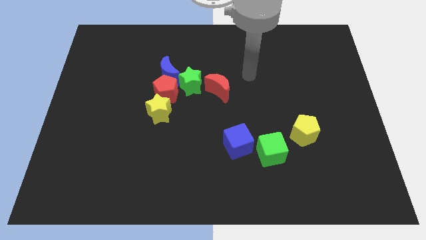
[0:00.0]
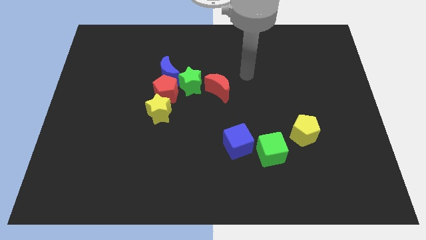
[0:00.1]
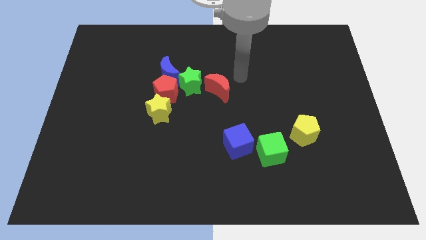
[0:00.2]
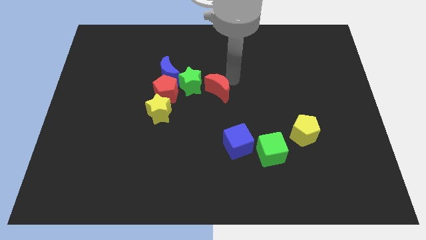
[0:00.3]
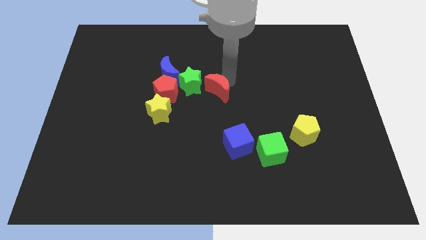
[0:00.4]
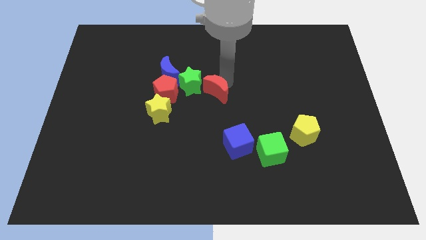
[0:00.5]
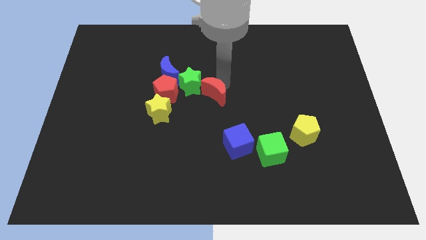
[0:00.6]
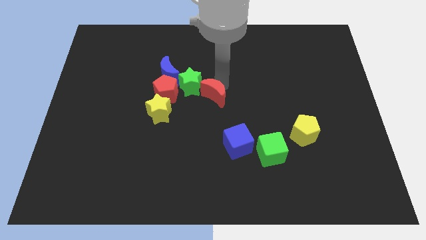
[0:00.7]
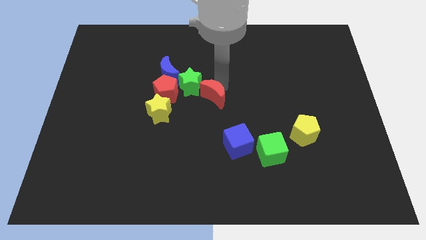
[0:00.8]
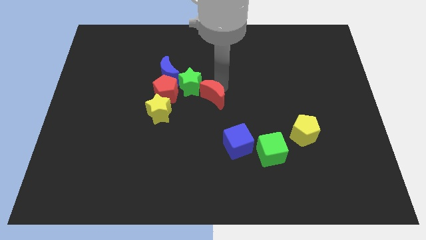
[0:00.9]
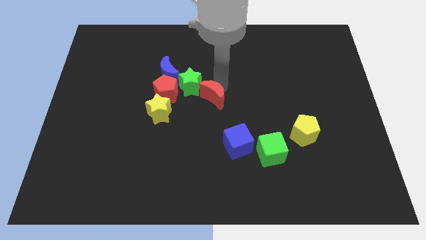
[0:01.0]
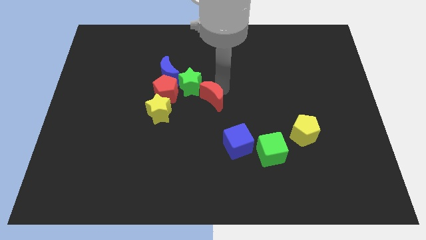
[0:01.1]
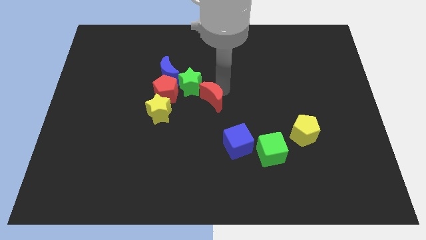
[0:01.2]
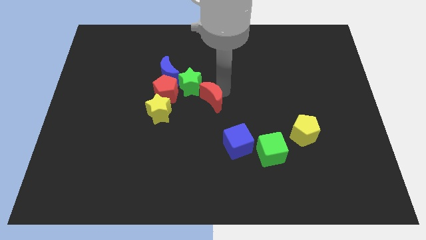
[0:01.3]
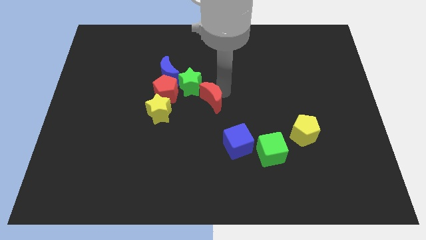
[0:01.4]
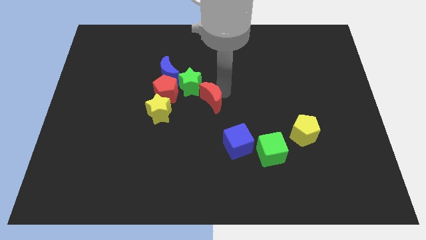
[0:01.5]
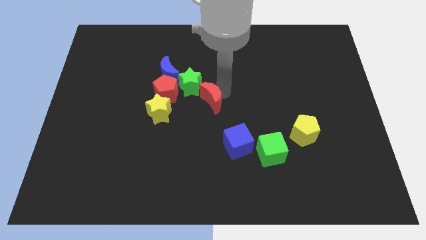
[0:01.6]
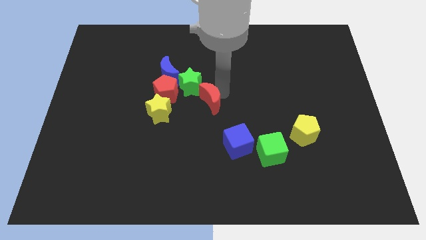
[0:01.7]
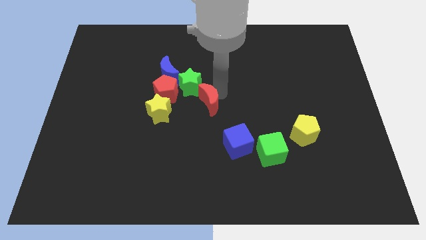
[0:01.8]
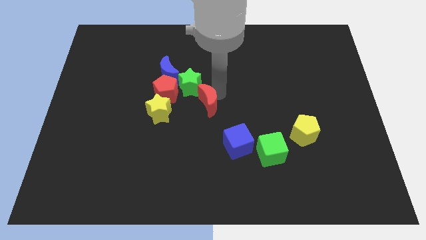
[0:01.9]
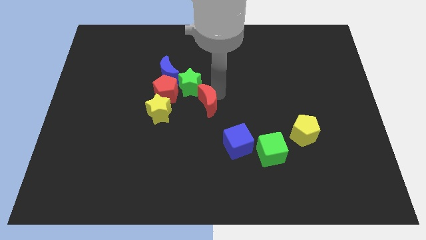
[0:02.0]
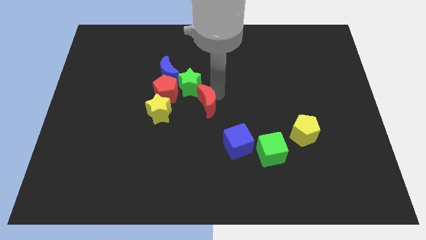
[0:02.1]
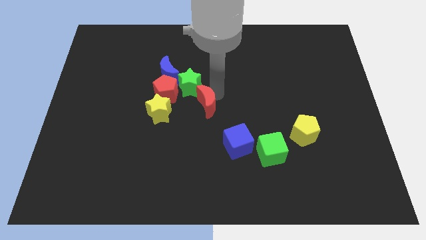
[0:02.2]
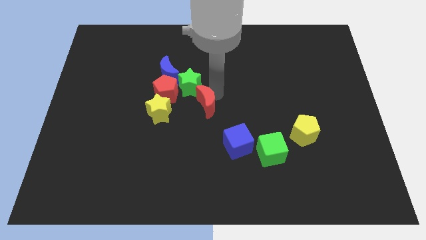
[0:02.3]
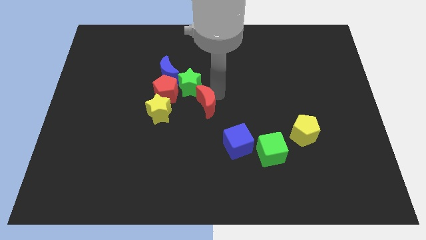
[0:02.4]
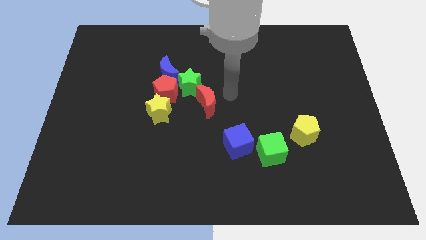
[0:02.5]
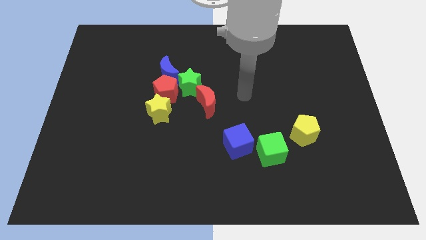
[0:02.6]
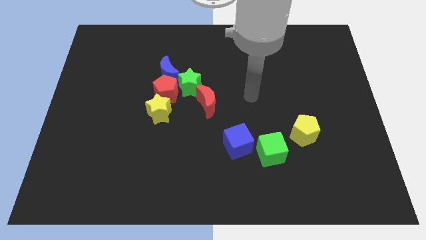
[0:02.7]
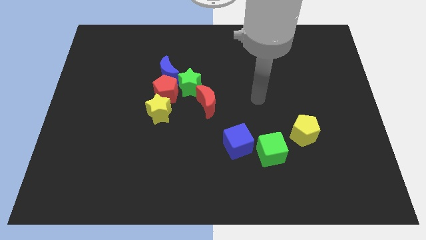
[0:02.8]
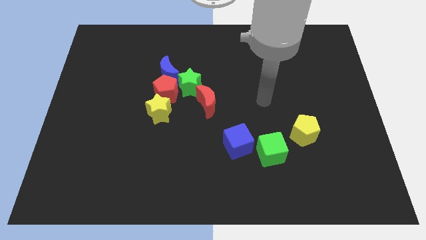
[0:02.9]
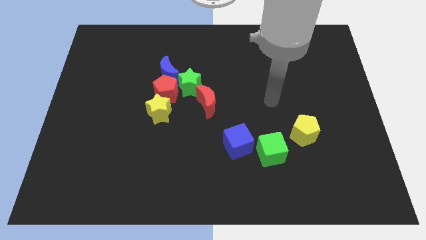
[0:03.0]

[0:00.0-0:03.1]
move the red moon below to the green star

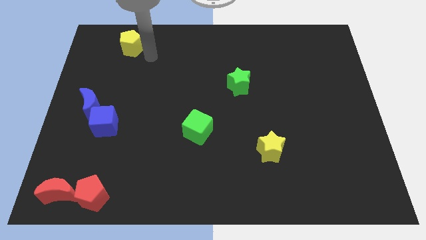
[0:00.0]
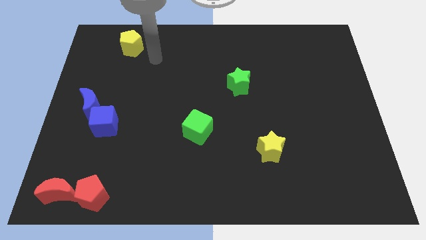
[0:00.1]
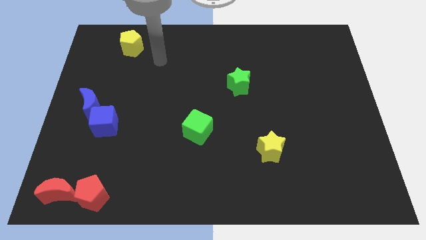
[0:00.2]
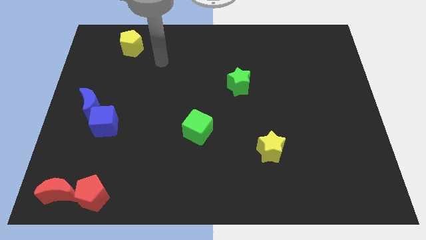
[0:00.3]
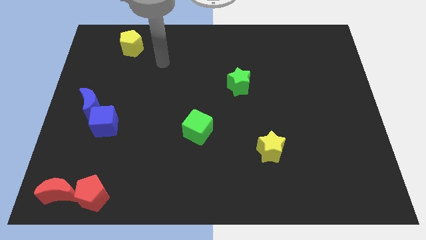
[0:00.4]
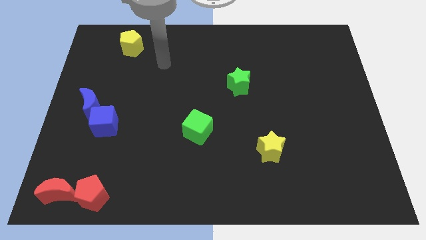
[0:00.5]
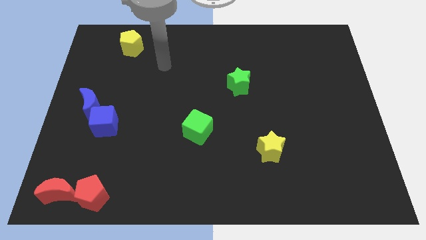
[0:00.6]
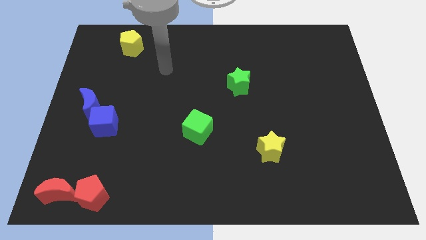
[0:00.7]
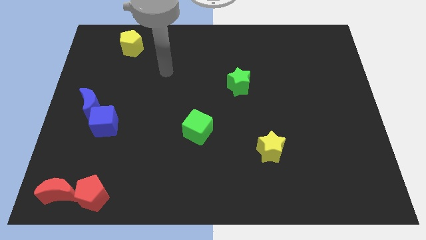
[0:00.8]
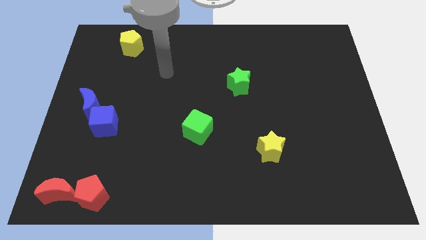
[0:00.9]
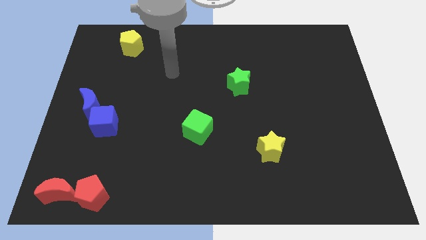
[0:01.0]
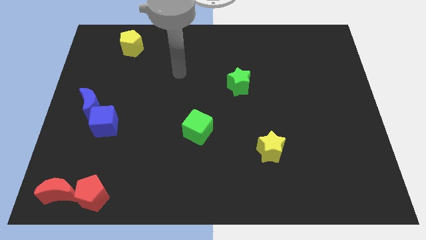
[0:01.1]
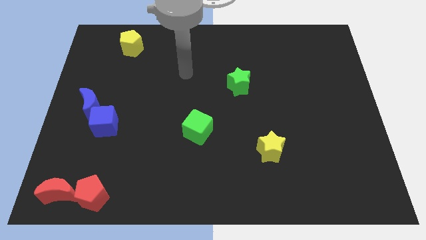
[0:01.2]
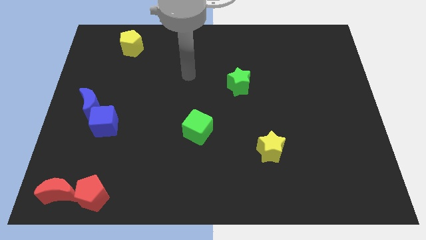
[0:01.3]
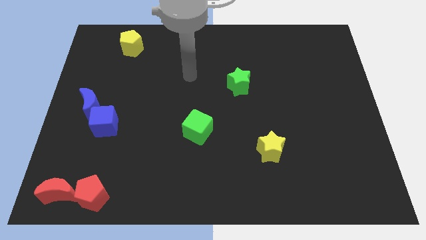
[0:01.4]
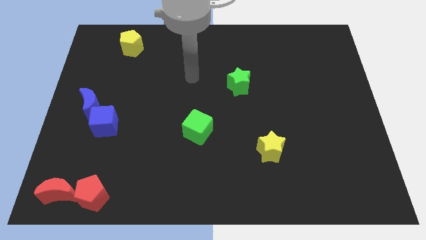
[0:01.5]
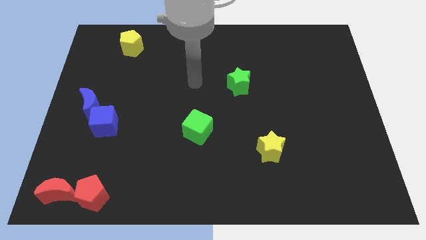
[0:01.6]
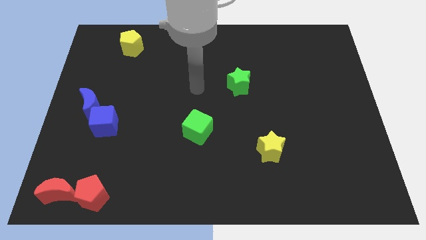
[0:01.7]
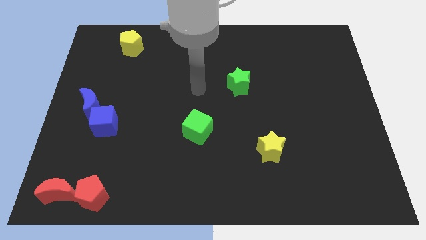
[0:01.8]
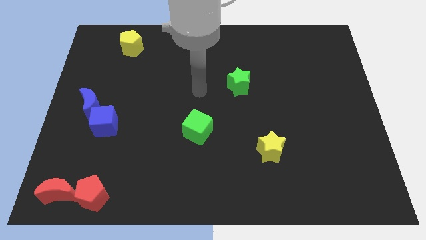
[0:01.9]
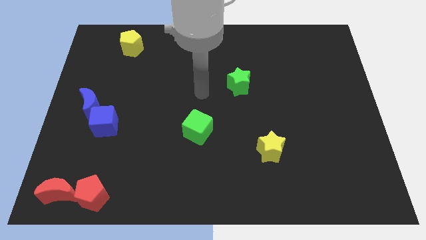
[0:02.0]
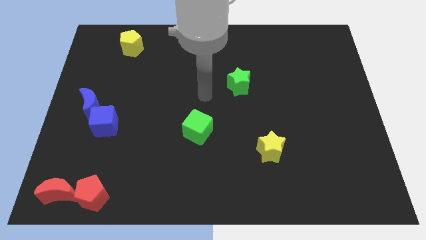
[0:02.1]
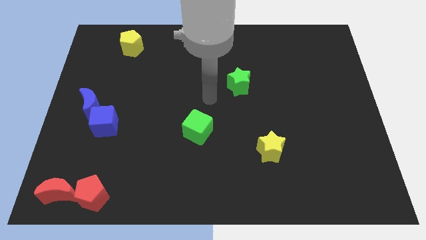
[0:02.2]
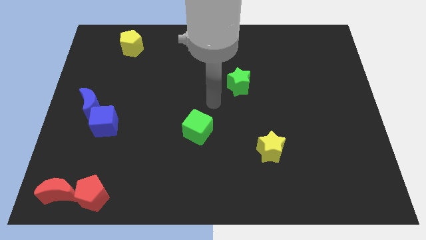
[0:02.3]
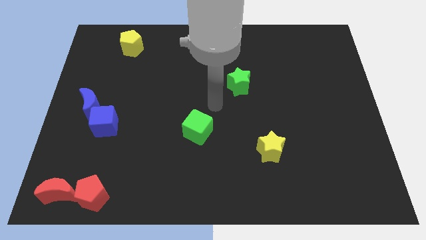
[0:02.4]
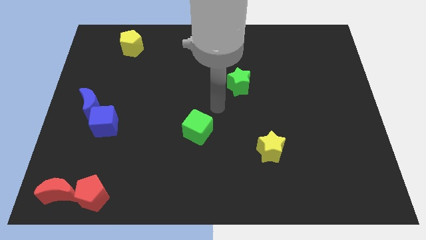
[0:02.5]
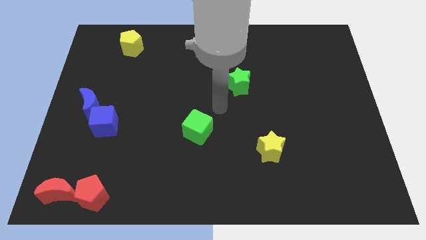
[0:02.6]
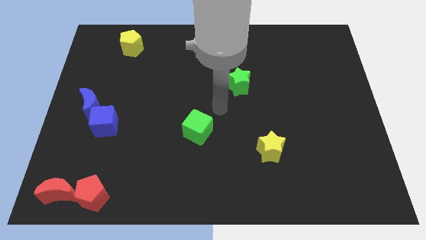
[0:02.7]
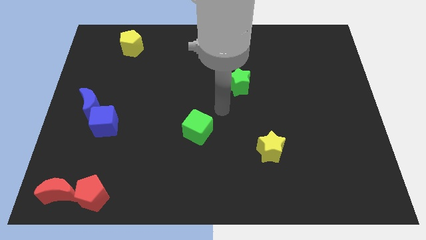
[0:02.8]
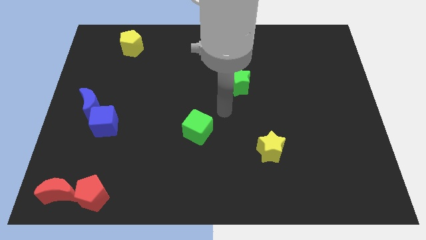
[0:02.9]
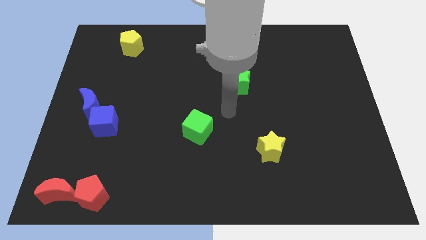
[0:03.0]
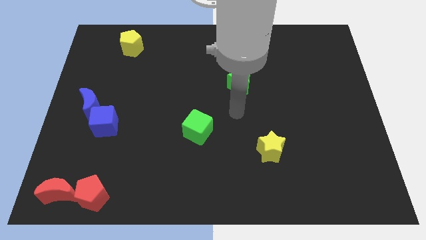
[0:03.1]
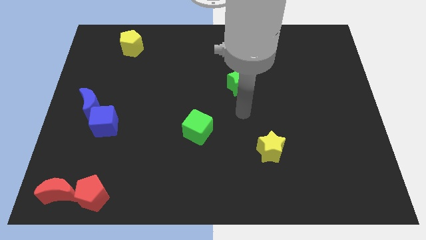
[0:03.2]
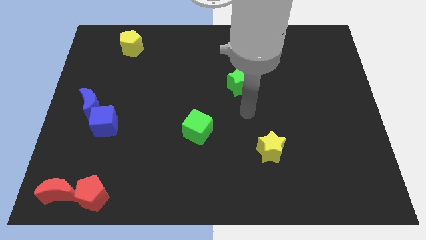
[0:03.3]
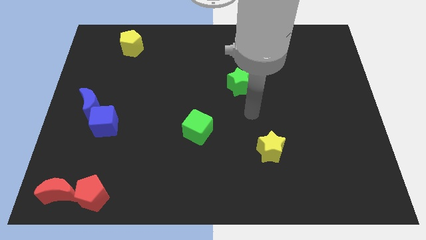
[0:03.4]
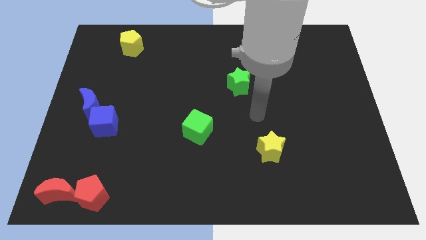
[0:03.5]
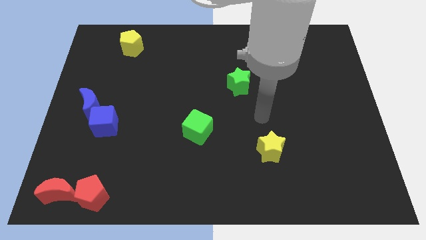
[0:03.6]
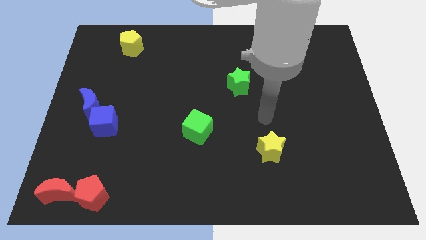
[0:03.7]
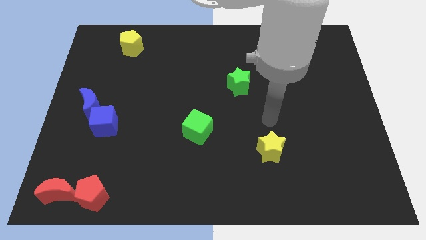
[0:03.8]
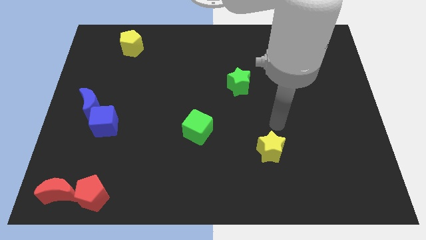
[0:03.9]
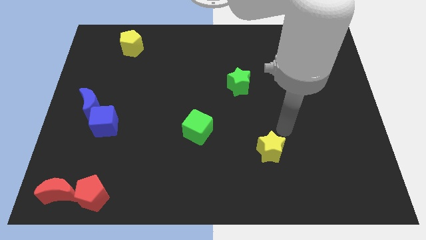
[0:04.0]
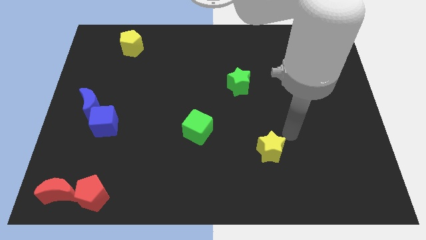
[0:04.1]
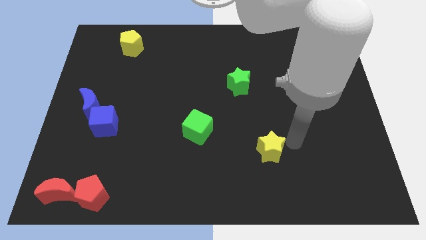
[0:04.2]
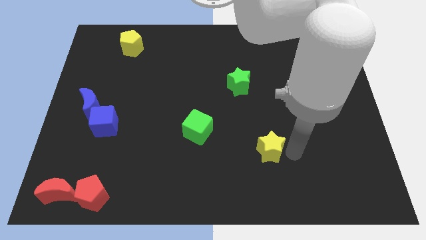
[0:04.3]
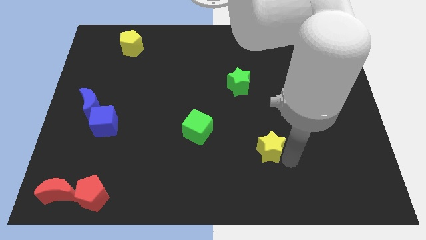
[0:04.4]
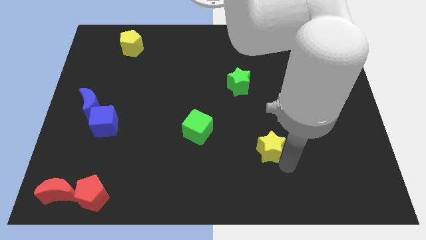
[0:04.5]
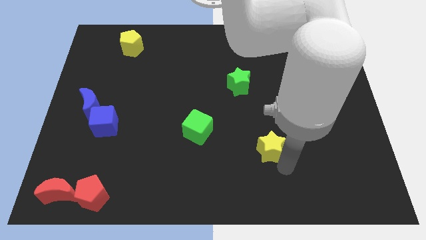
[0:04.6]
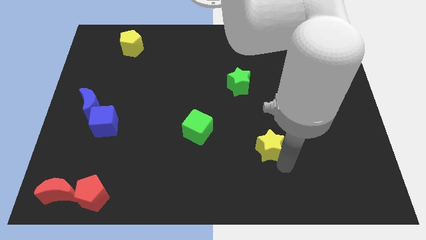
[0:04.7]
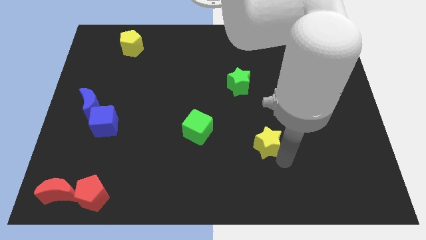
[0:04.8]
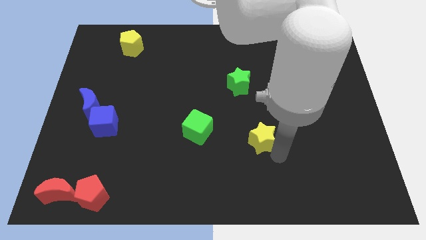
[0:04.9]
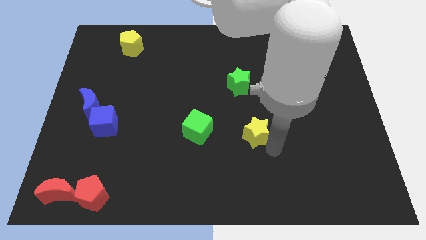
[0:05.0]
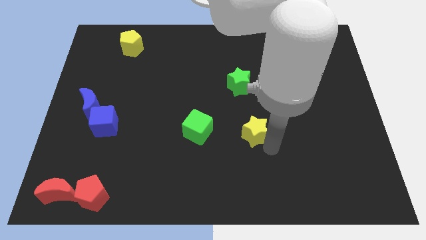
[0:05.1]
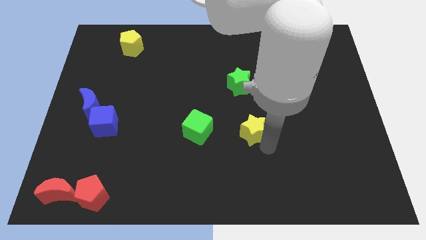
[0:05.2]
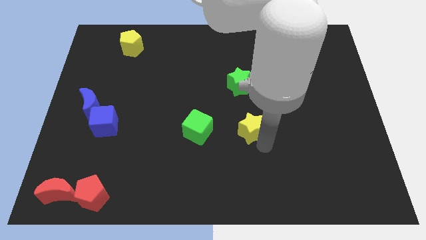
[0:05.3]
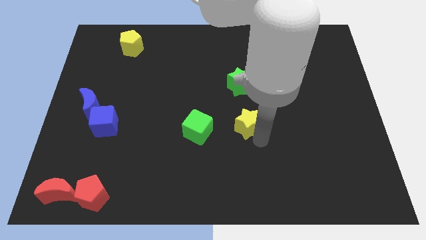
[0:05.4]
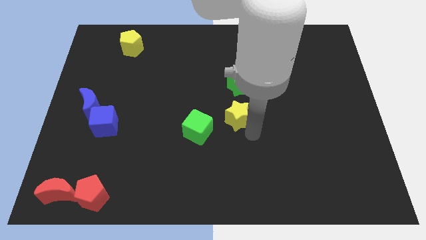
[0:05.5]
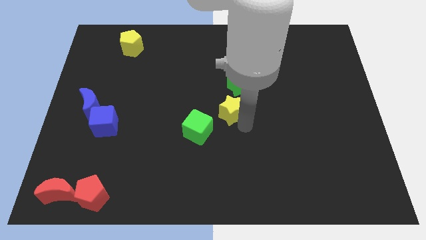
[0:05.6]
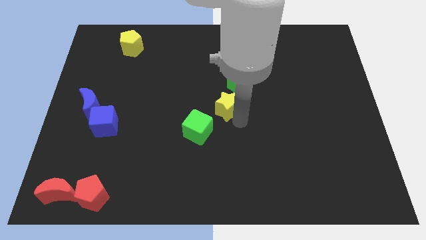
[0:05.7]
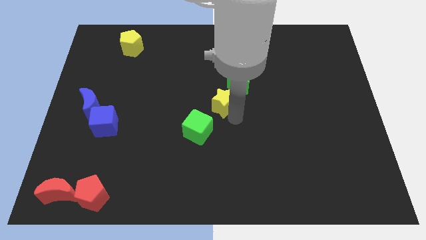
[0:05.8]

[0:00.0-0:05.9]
slide the yellow star in between the green blocks
